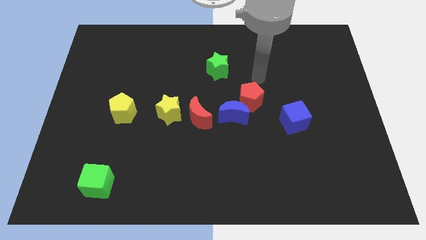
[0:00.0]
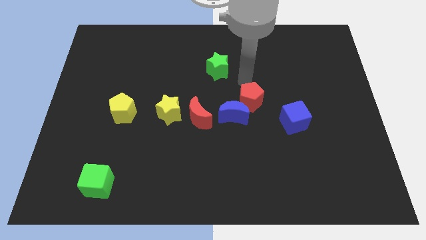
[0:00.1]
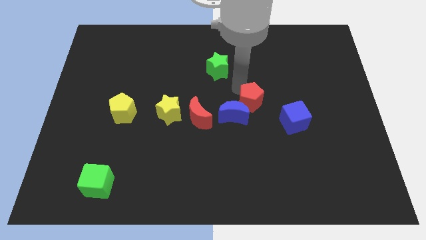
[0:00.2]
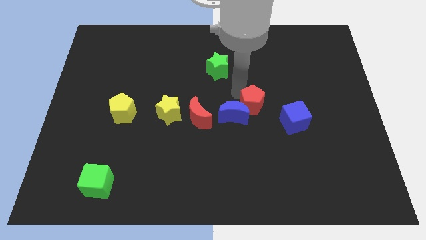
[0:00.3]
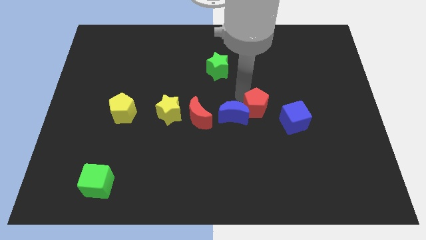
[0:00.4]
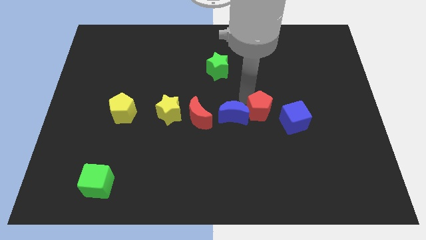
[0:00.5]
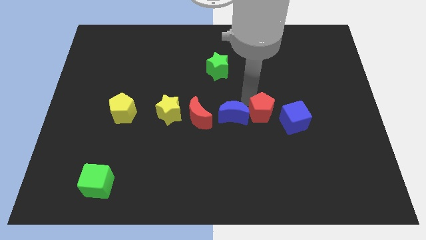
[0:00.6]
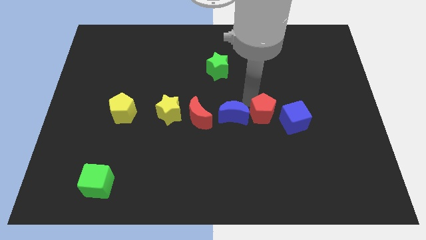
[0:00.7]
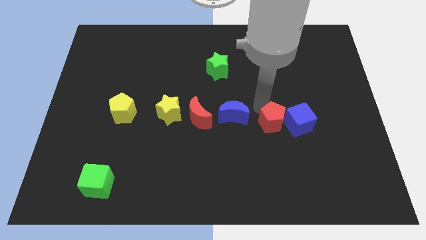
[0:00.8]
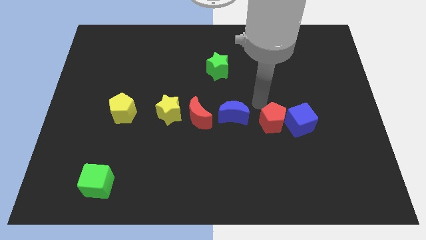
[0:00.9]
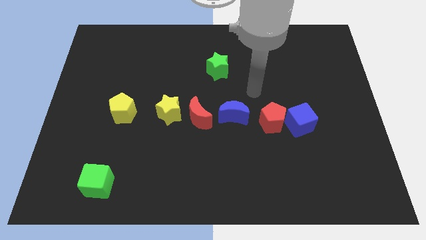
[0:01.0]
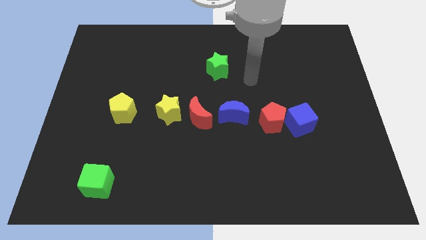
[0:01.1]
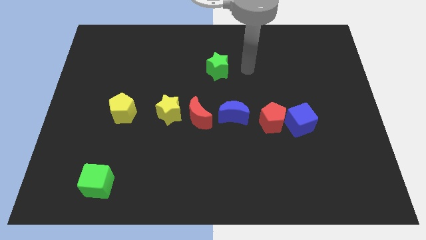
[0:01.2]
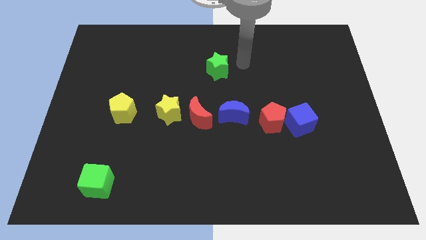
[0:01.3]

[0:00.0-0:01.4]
put red pentagon in between blue blocks

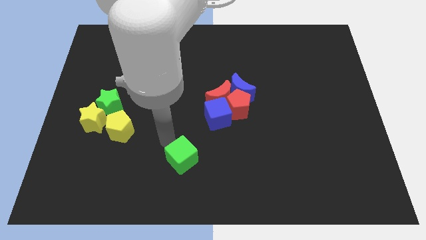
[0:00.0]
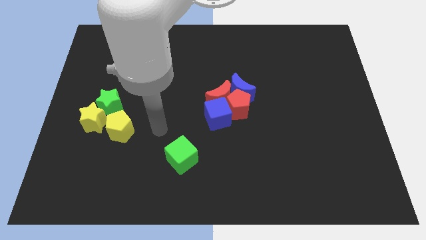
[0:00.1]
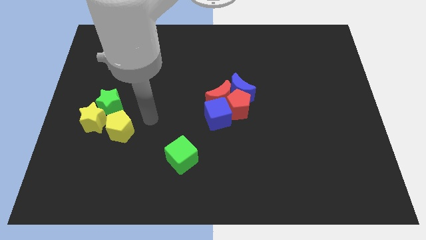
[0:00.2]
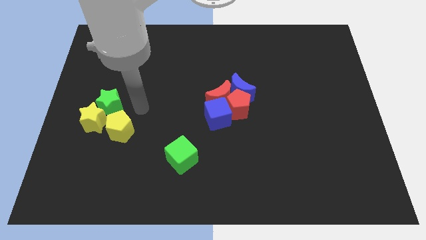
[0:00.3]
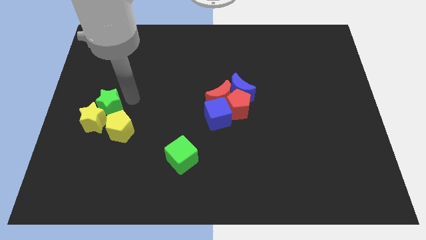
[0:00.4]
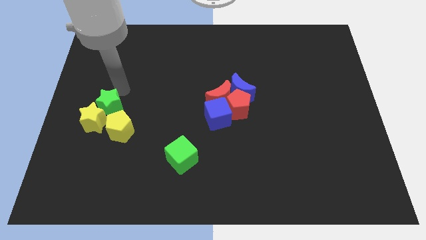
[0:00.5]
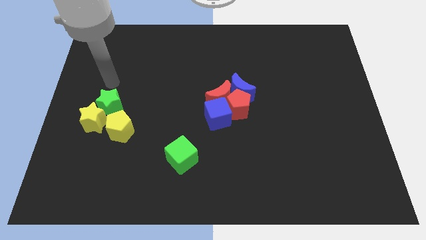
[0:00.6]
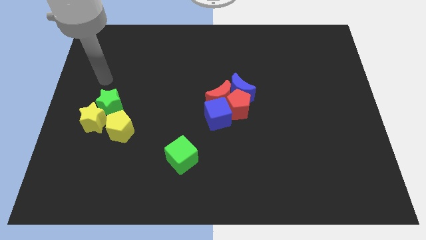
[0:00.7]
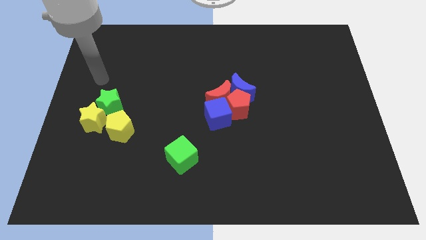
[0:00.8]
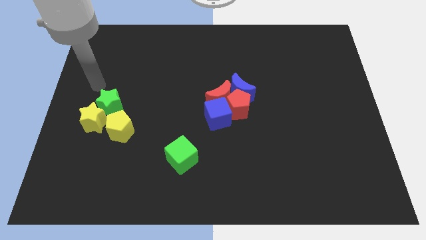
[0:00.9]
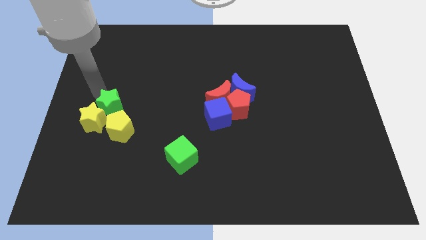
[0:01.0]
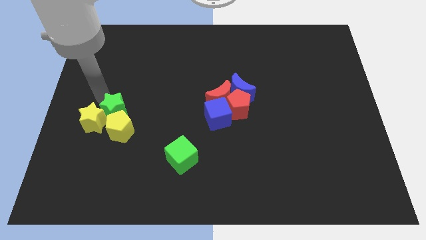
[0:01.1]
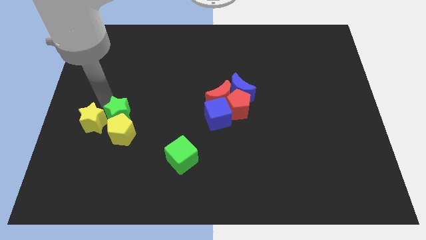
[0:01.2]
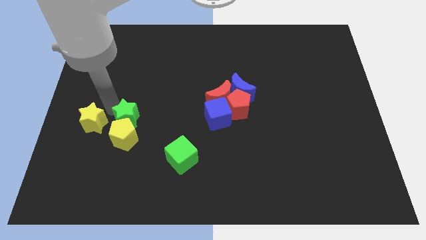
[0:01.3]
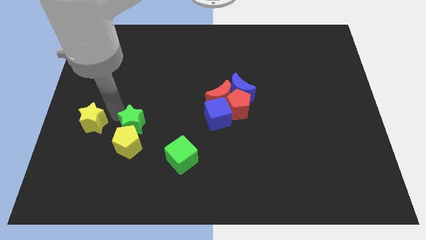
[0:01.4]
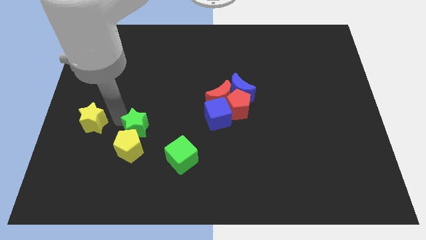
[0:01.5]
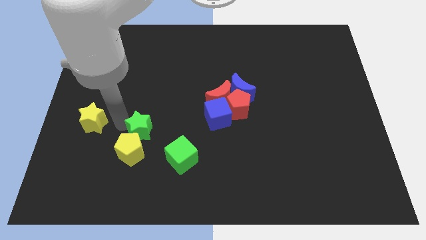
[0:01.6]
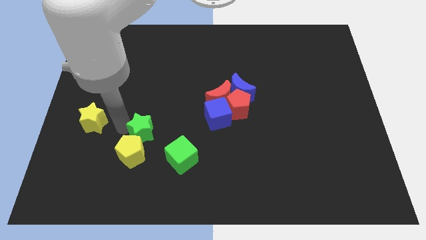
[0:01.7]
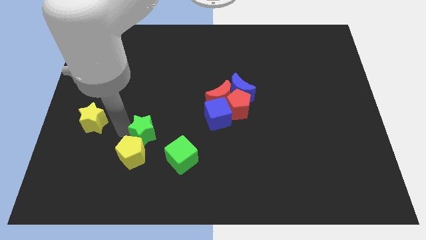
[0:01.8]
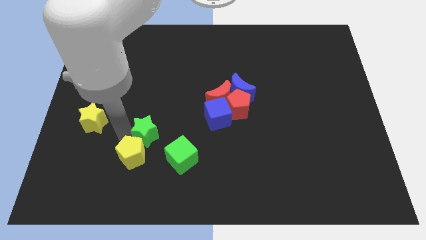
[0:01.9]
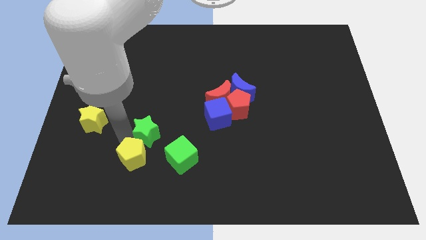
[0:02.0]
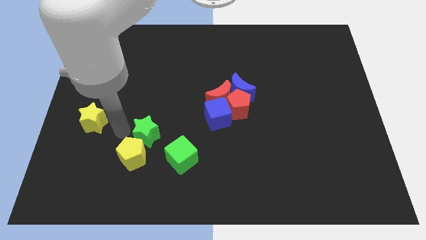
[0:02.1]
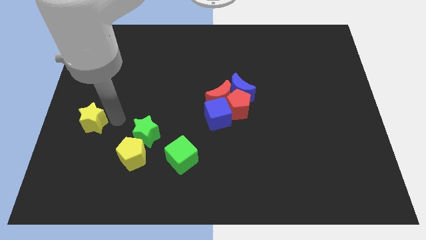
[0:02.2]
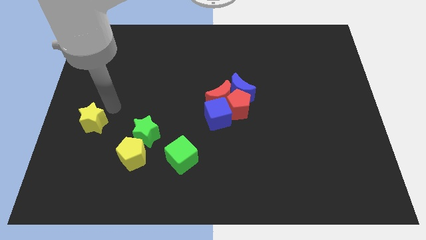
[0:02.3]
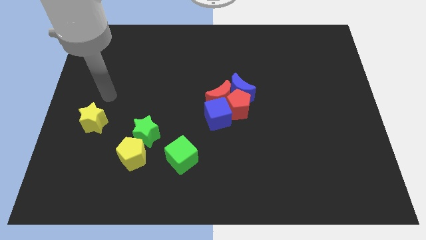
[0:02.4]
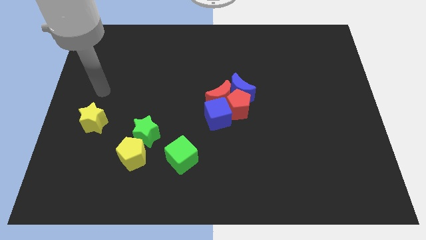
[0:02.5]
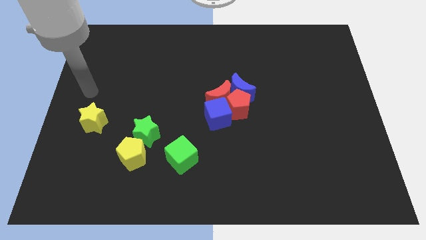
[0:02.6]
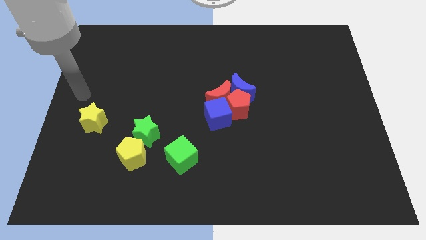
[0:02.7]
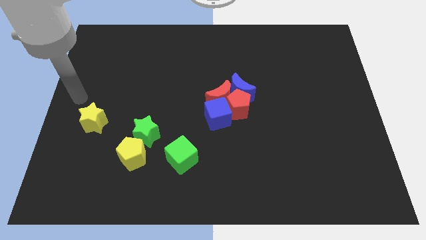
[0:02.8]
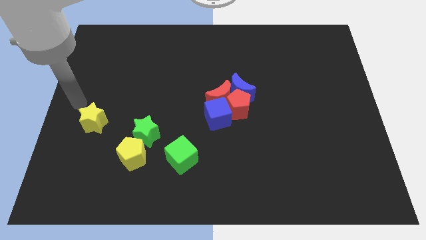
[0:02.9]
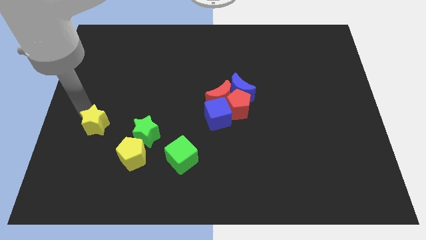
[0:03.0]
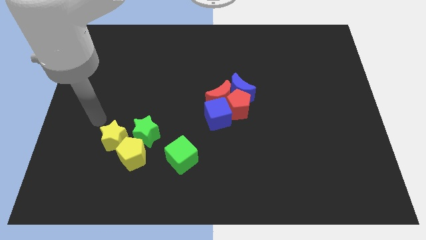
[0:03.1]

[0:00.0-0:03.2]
push the green star slightly towards the green cube

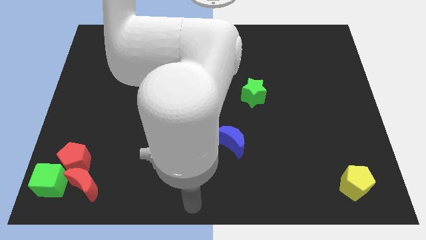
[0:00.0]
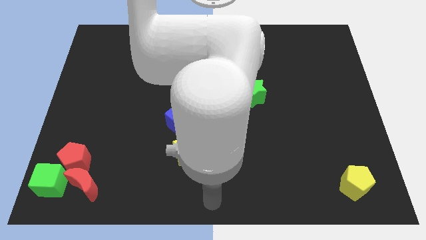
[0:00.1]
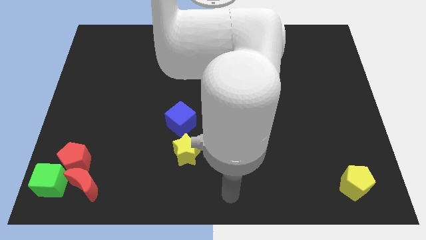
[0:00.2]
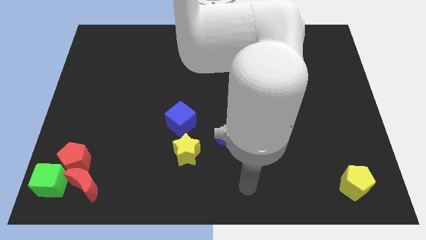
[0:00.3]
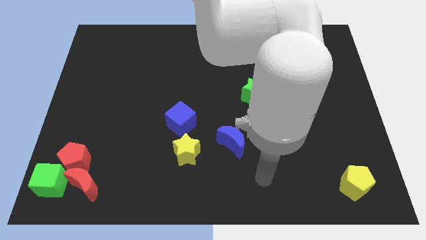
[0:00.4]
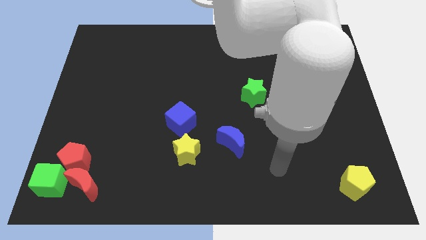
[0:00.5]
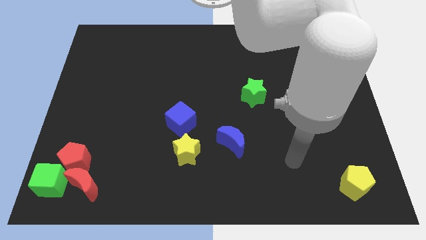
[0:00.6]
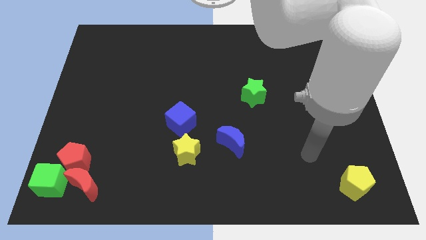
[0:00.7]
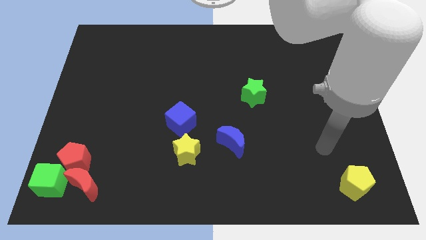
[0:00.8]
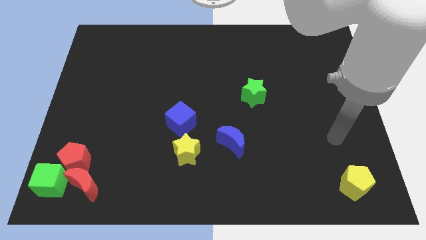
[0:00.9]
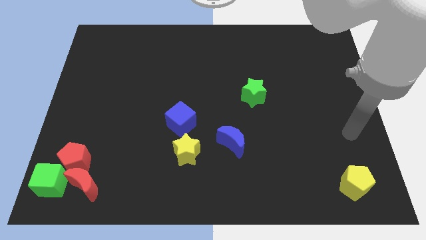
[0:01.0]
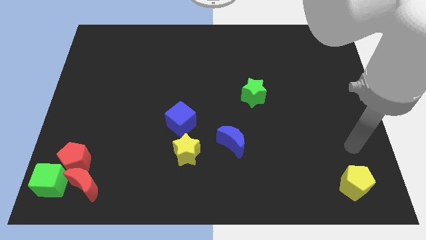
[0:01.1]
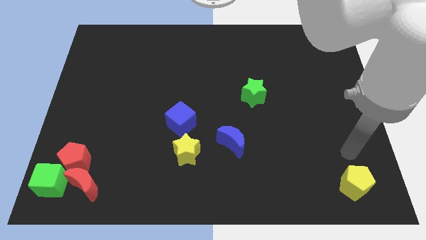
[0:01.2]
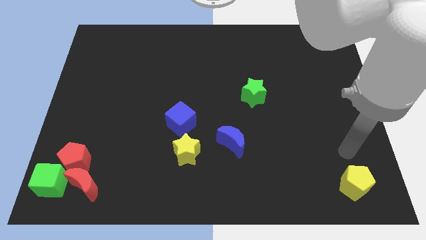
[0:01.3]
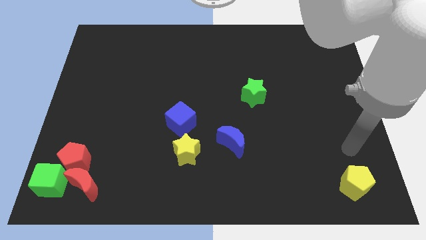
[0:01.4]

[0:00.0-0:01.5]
move your arm to the top of yellow pentagon

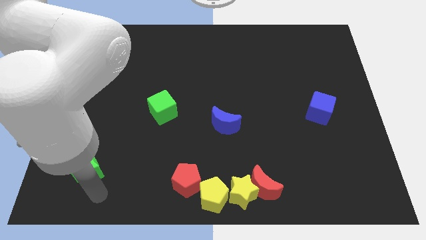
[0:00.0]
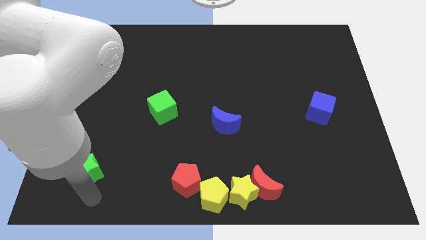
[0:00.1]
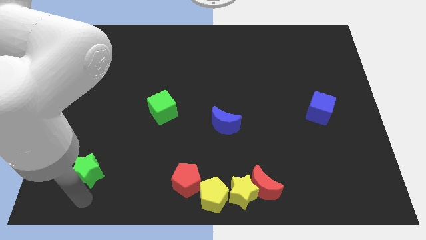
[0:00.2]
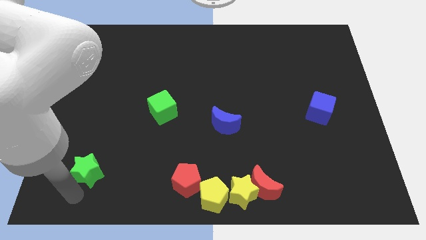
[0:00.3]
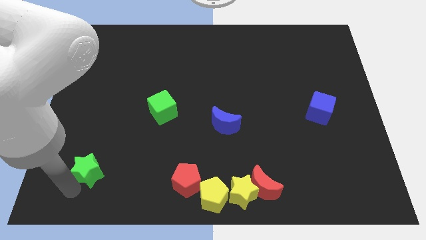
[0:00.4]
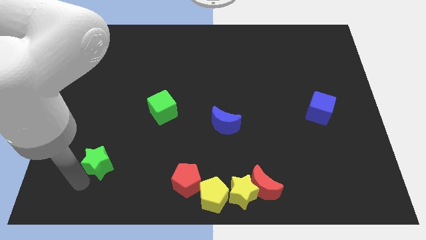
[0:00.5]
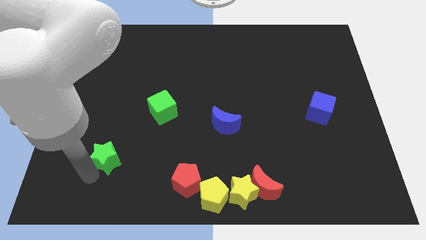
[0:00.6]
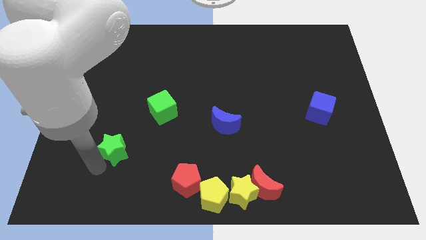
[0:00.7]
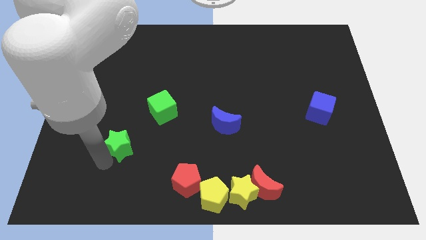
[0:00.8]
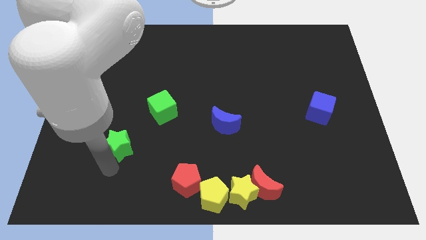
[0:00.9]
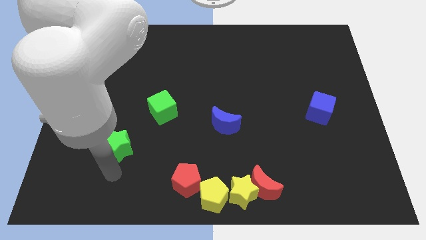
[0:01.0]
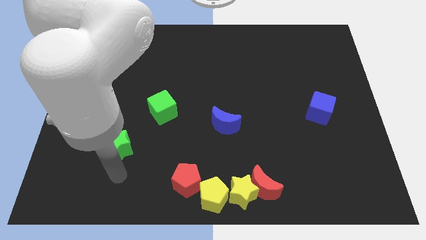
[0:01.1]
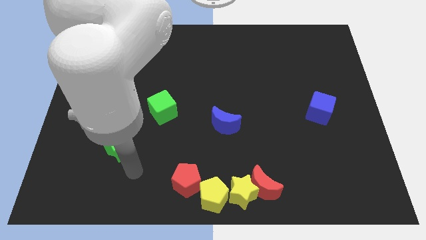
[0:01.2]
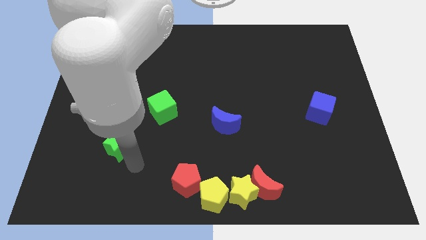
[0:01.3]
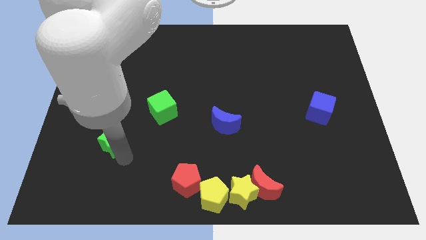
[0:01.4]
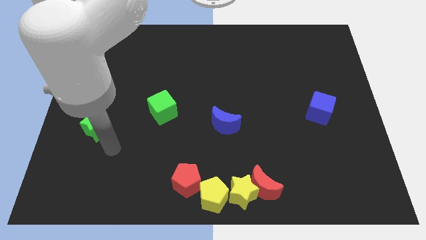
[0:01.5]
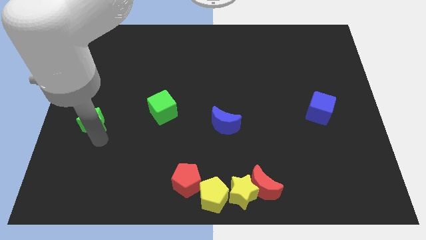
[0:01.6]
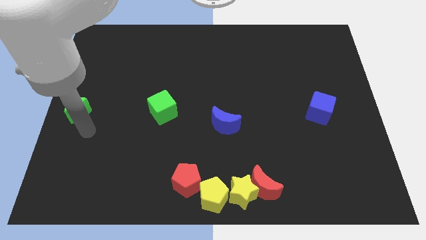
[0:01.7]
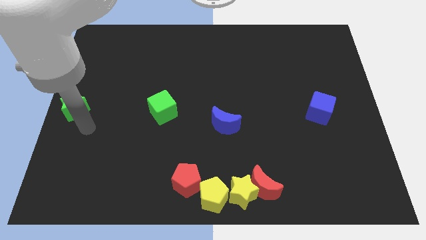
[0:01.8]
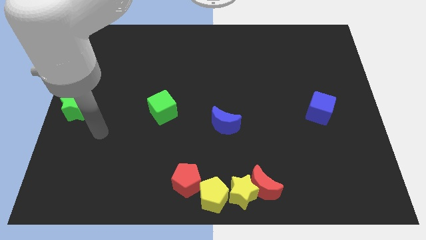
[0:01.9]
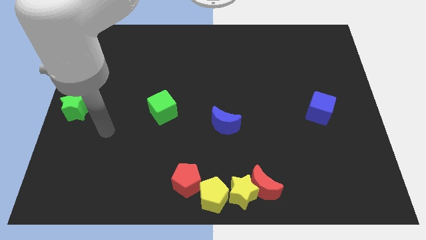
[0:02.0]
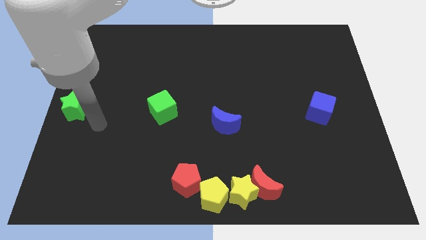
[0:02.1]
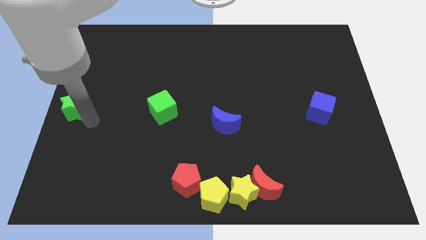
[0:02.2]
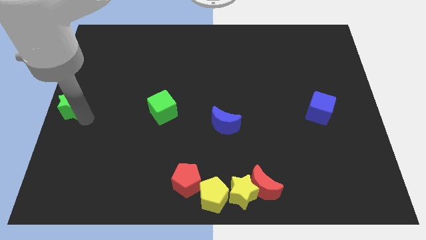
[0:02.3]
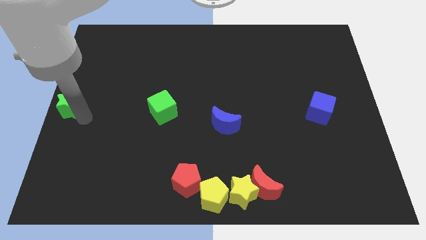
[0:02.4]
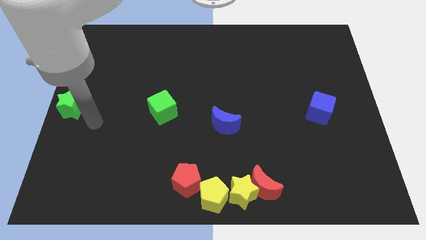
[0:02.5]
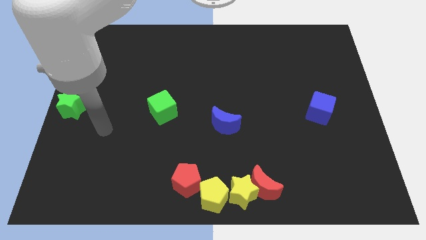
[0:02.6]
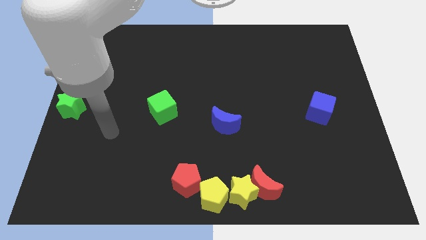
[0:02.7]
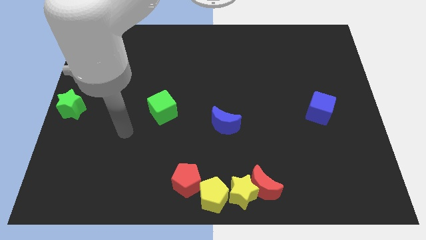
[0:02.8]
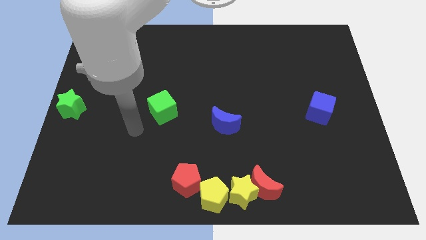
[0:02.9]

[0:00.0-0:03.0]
move the green star to the center left of the board
